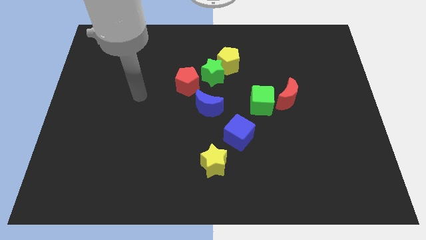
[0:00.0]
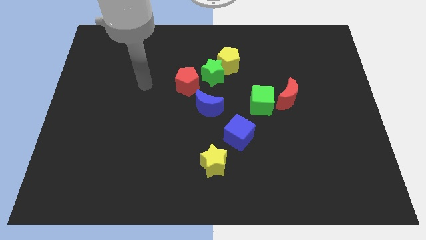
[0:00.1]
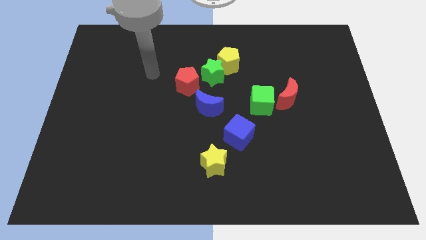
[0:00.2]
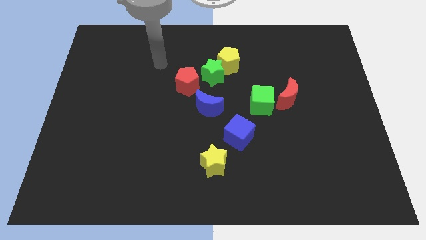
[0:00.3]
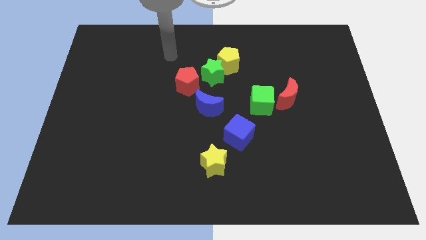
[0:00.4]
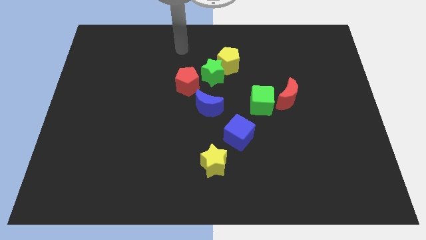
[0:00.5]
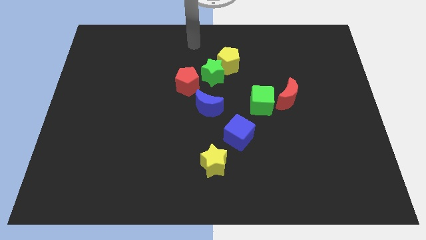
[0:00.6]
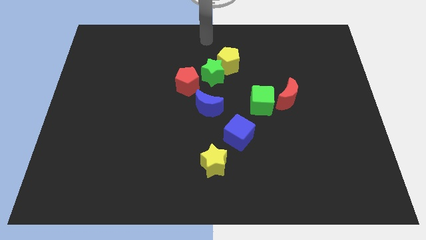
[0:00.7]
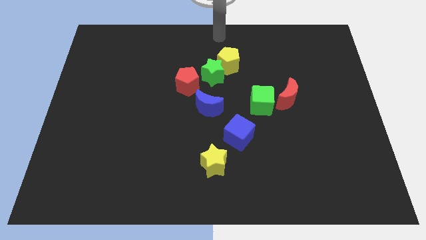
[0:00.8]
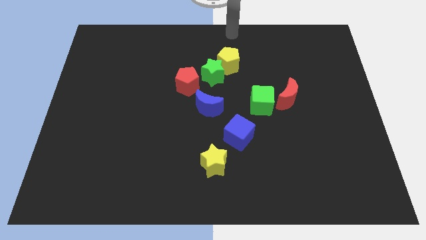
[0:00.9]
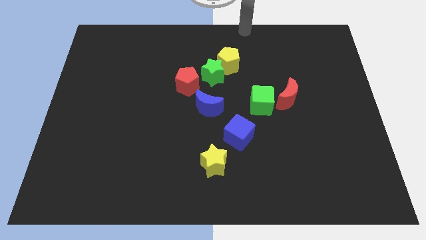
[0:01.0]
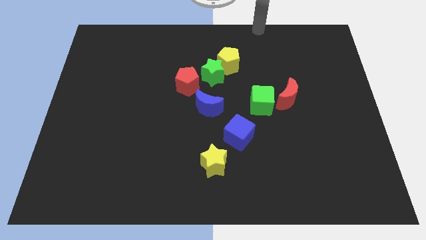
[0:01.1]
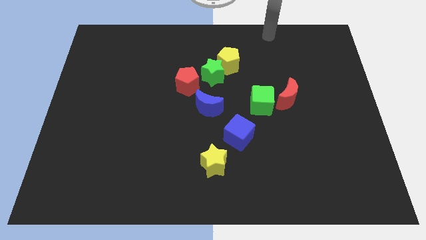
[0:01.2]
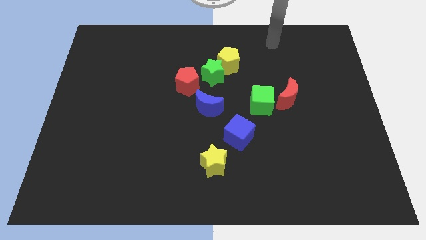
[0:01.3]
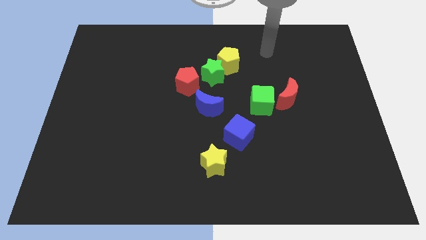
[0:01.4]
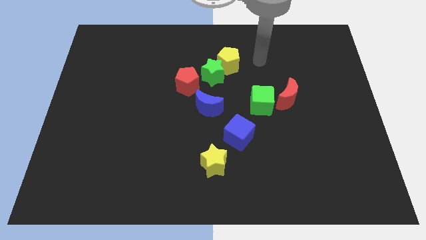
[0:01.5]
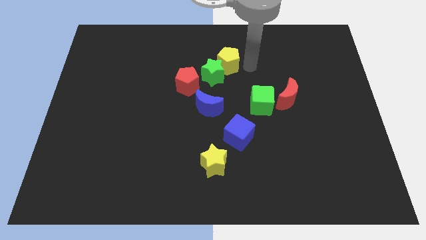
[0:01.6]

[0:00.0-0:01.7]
move your arm right to the yellow pentagon

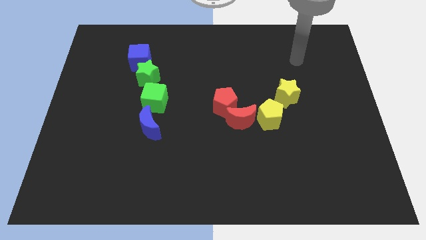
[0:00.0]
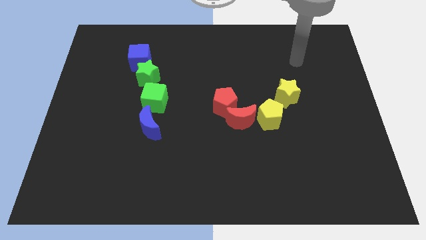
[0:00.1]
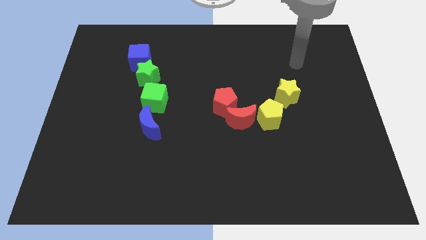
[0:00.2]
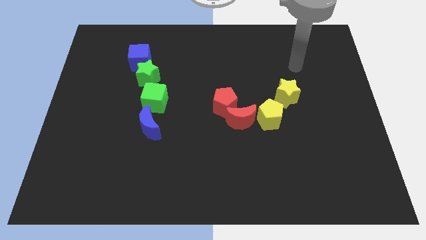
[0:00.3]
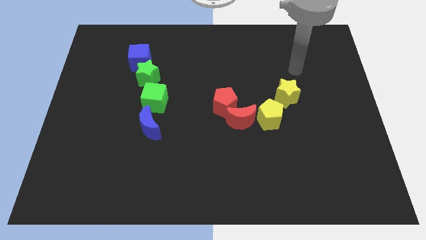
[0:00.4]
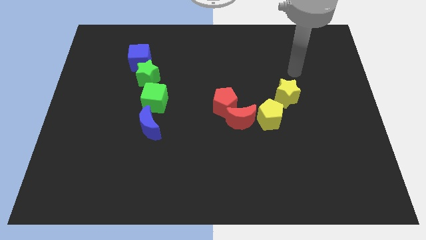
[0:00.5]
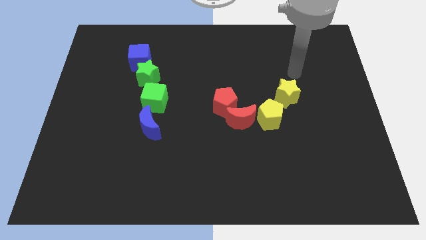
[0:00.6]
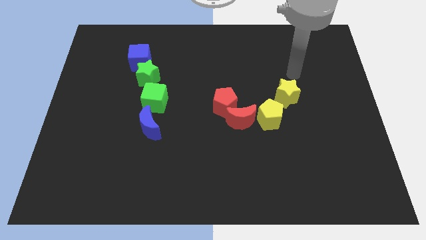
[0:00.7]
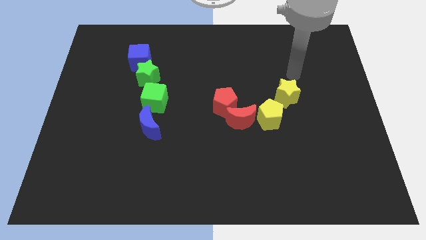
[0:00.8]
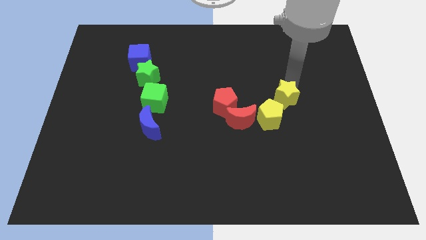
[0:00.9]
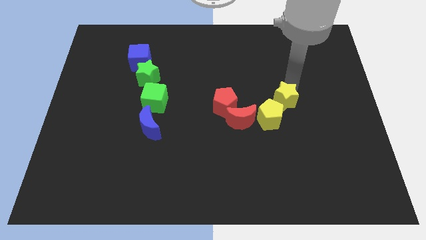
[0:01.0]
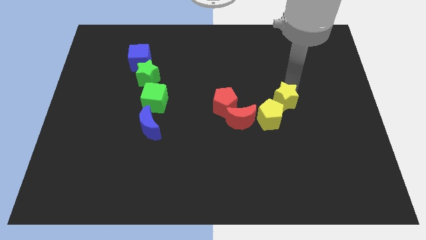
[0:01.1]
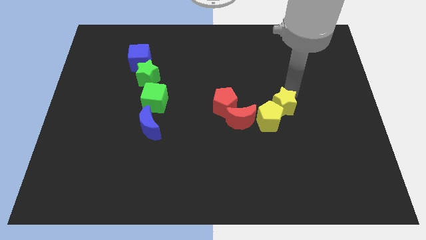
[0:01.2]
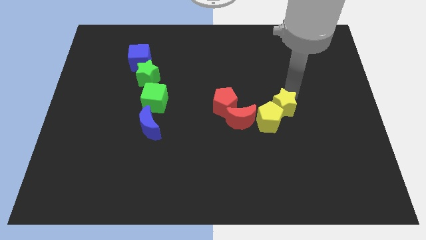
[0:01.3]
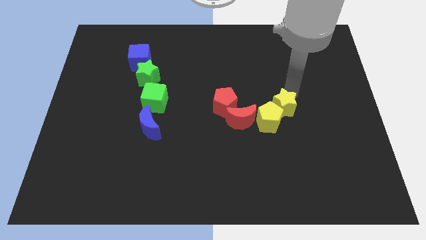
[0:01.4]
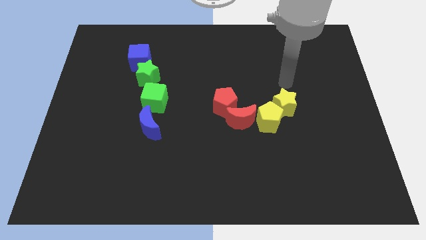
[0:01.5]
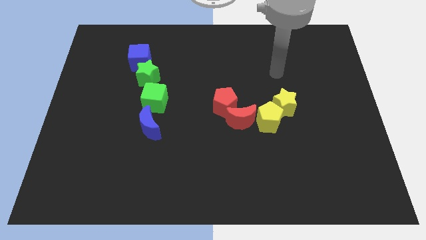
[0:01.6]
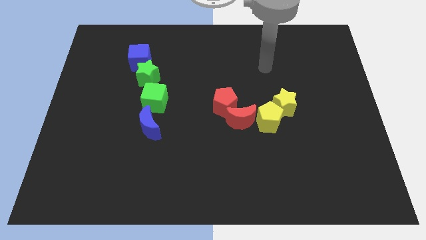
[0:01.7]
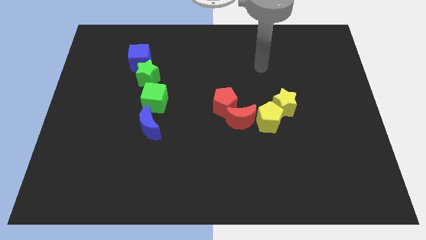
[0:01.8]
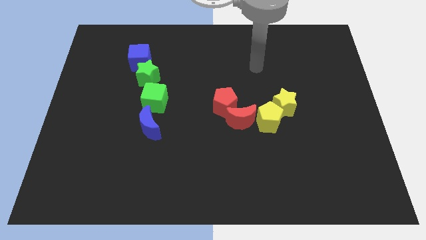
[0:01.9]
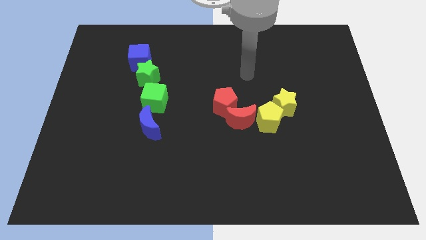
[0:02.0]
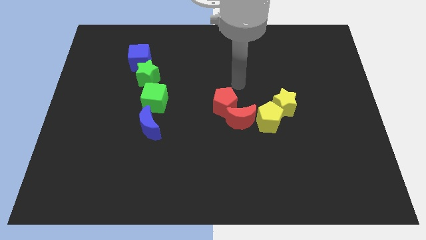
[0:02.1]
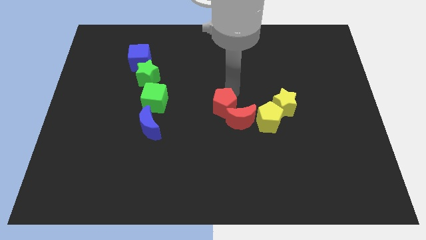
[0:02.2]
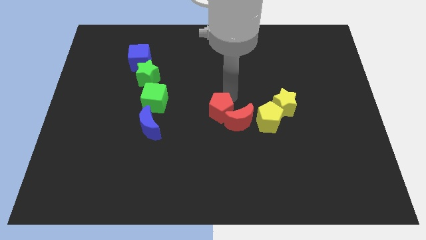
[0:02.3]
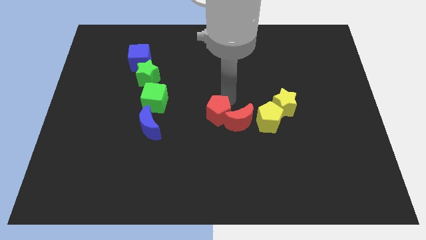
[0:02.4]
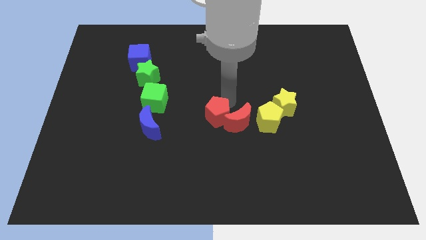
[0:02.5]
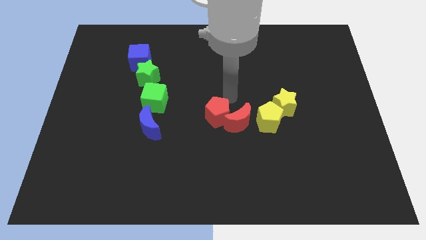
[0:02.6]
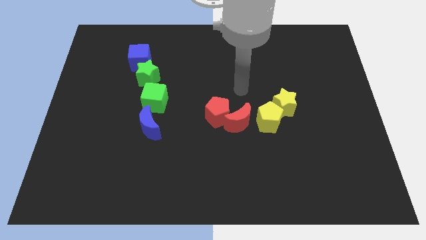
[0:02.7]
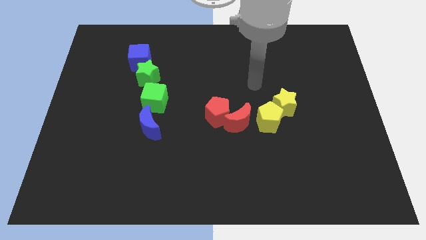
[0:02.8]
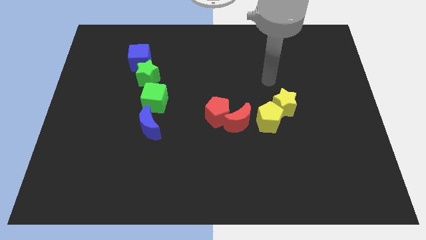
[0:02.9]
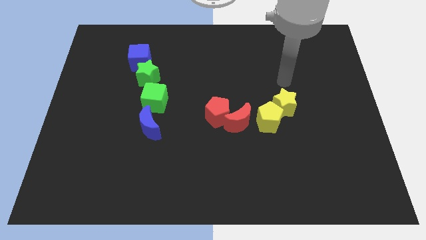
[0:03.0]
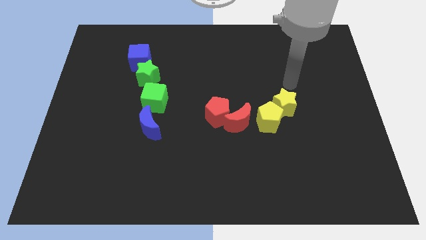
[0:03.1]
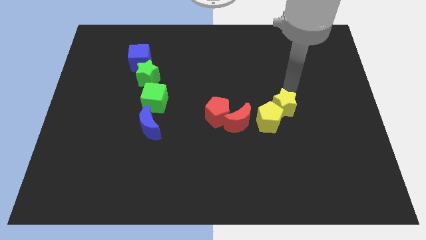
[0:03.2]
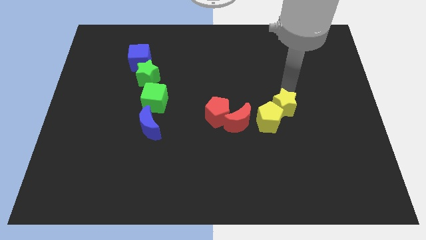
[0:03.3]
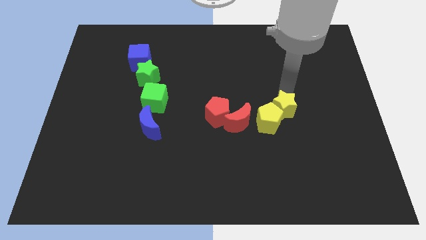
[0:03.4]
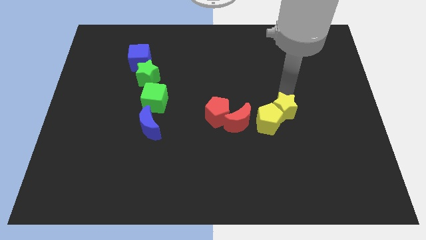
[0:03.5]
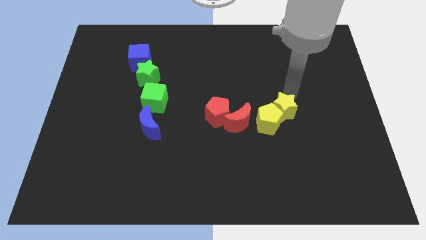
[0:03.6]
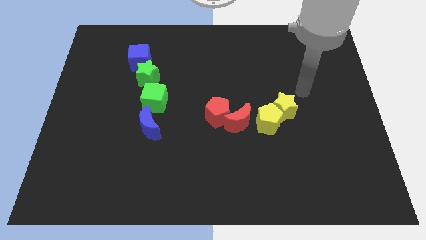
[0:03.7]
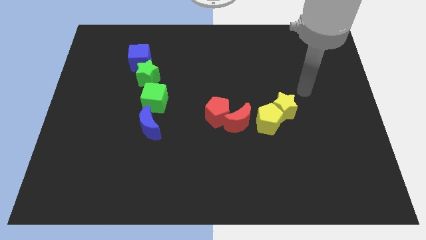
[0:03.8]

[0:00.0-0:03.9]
push the red and yellow blocks towards the bottom side of the board

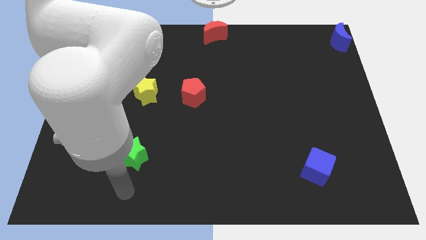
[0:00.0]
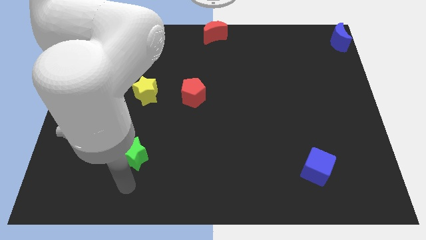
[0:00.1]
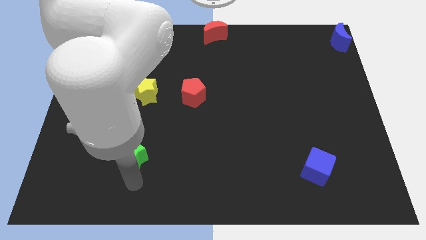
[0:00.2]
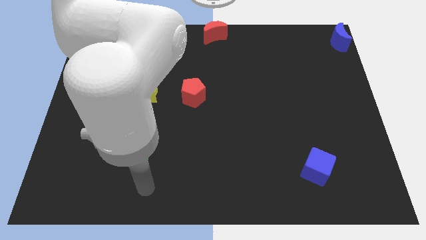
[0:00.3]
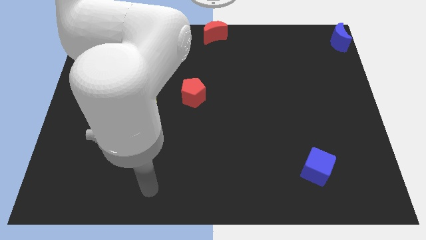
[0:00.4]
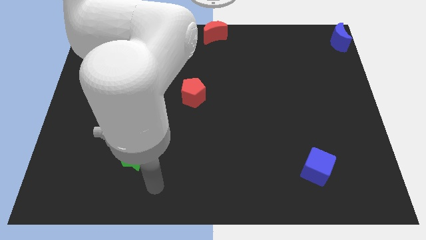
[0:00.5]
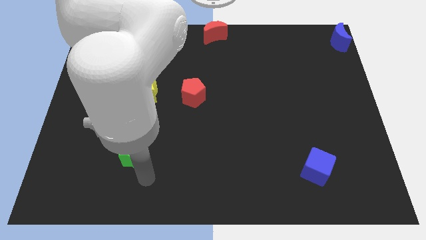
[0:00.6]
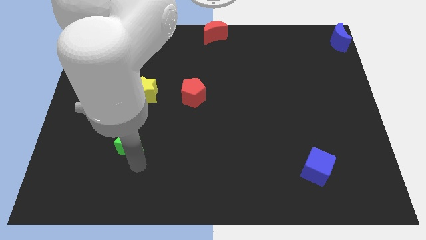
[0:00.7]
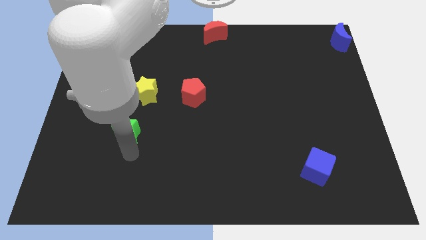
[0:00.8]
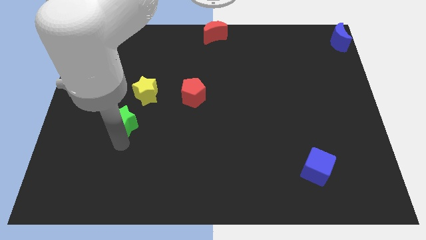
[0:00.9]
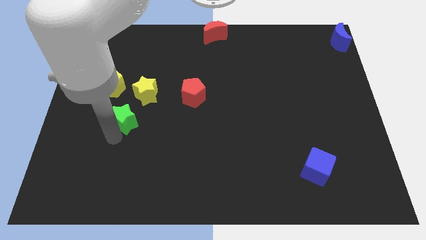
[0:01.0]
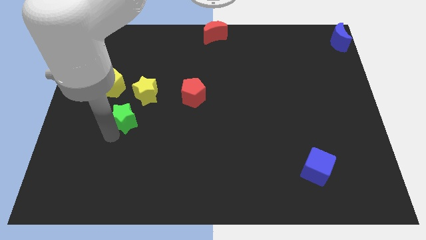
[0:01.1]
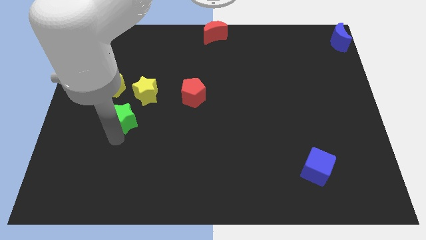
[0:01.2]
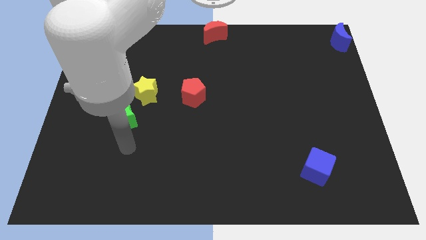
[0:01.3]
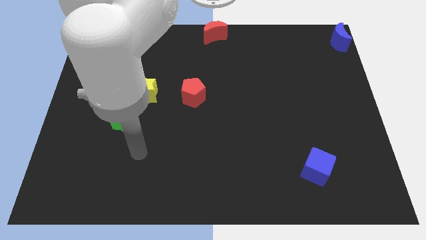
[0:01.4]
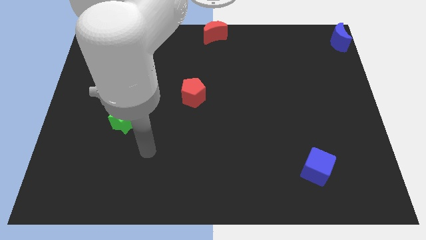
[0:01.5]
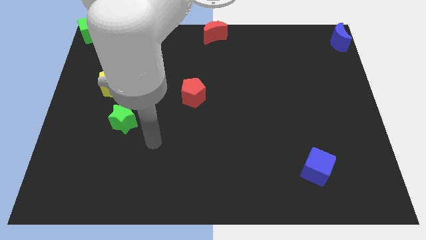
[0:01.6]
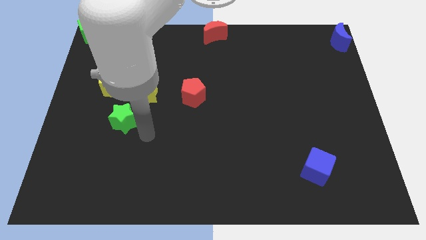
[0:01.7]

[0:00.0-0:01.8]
push the green star closer to the yellow pentagon

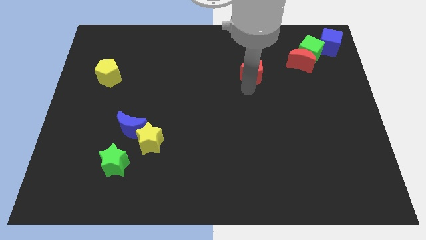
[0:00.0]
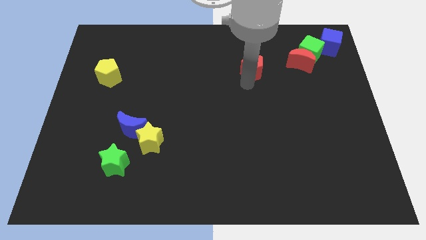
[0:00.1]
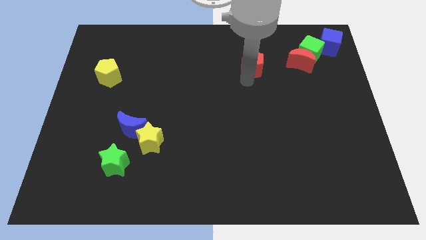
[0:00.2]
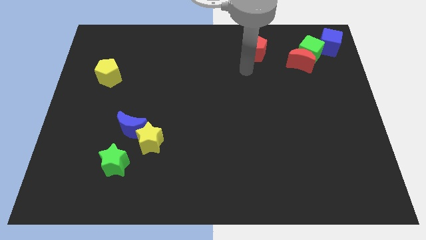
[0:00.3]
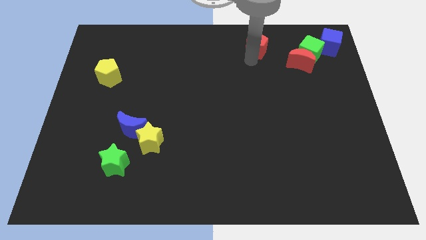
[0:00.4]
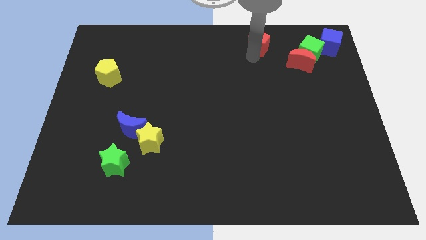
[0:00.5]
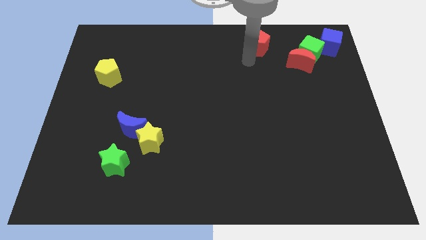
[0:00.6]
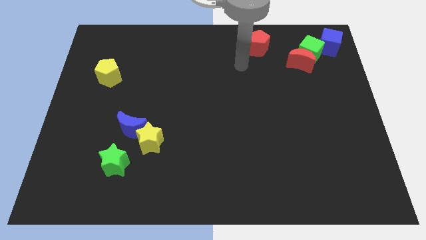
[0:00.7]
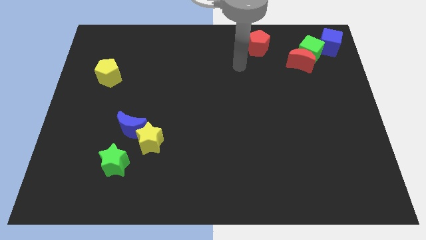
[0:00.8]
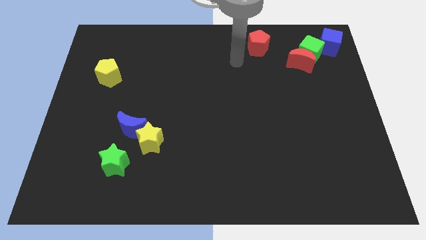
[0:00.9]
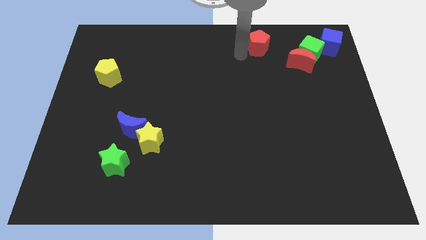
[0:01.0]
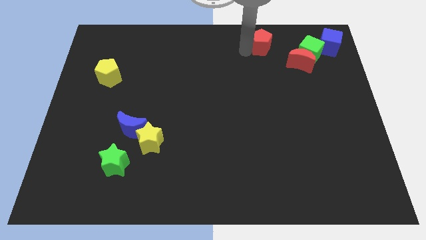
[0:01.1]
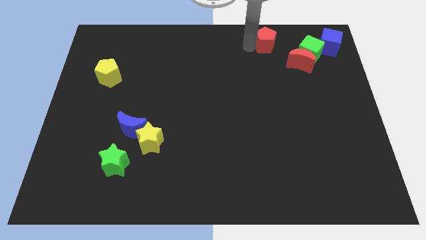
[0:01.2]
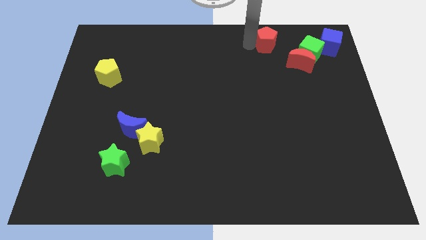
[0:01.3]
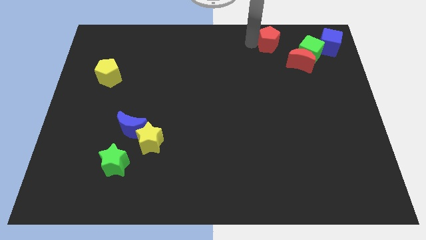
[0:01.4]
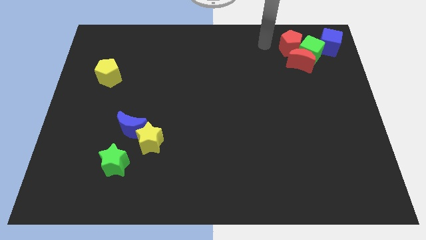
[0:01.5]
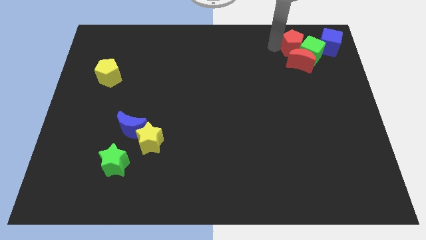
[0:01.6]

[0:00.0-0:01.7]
place the red pentagon to the top of the red moon
